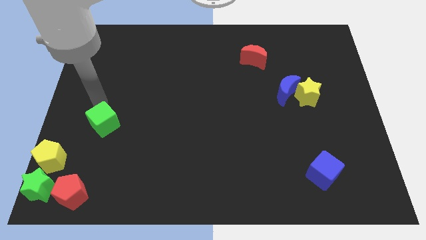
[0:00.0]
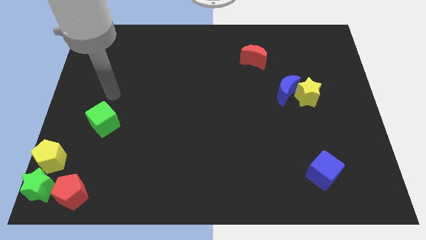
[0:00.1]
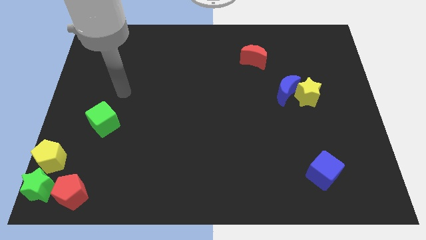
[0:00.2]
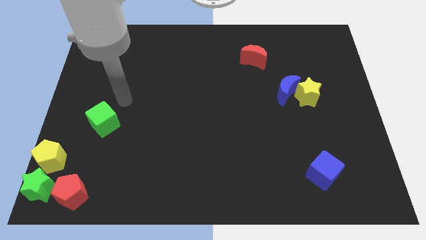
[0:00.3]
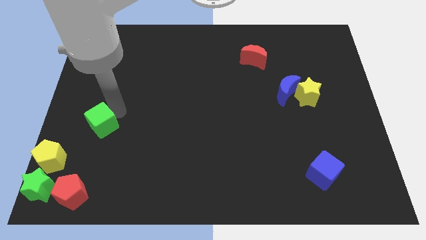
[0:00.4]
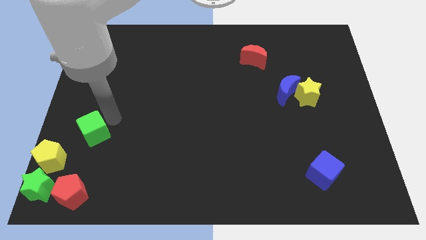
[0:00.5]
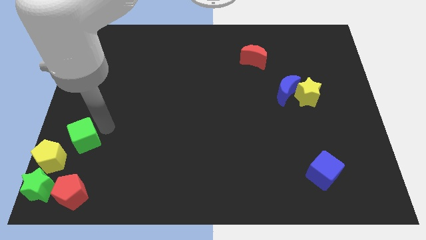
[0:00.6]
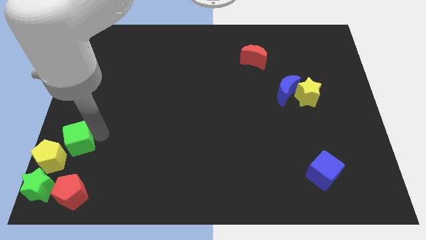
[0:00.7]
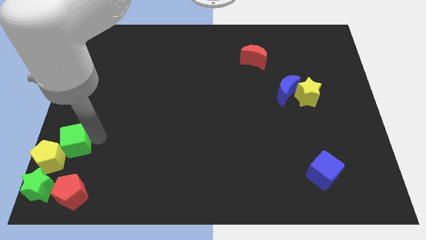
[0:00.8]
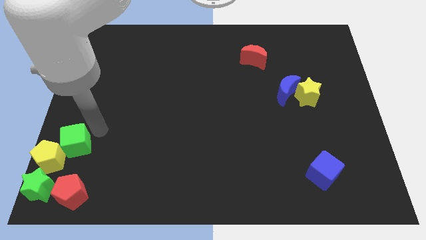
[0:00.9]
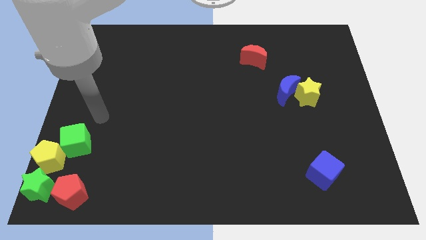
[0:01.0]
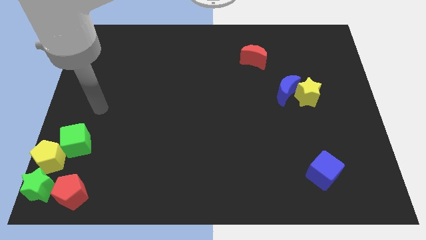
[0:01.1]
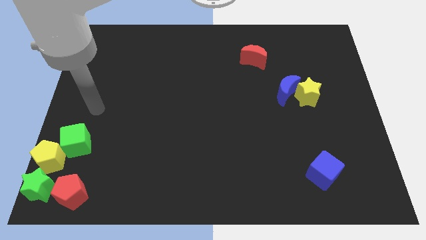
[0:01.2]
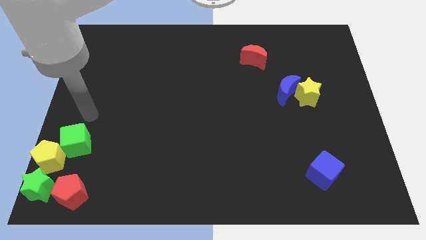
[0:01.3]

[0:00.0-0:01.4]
push the green cube into yellow pentagon

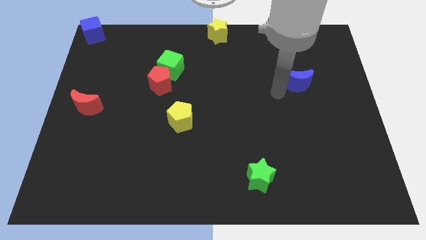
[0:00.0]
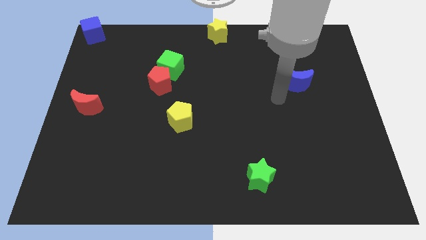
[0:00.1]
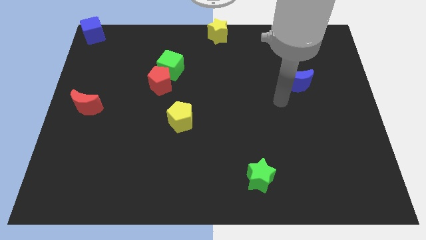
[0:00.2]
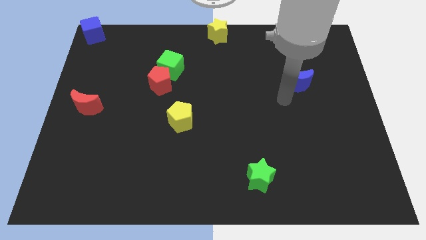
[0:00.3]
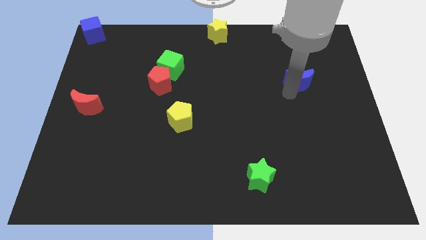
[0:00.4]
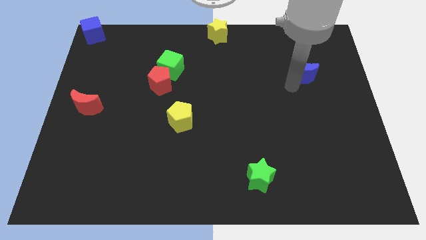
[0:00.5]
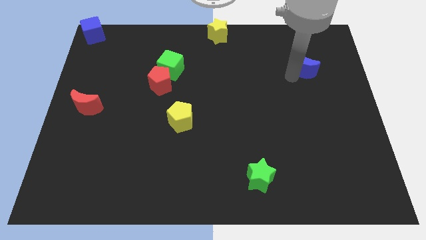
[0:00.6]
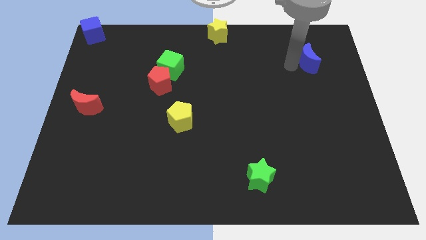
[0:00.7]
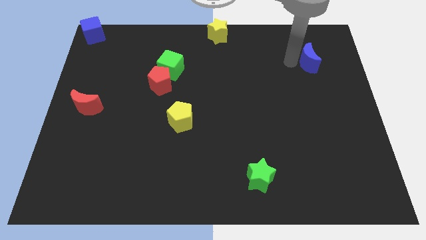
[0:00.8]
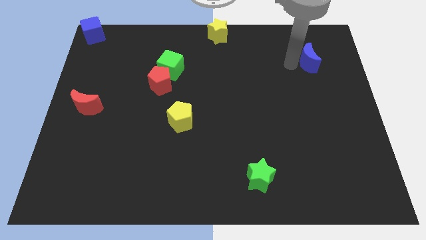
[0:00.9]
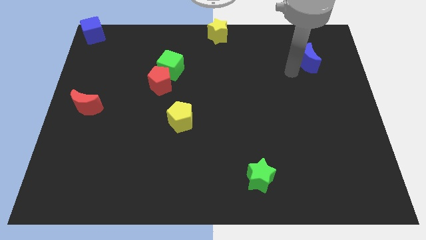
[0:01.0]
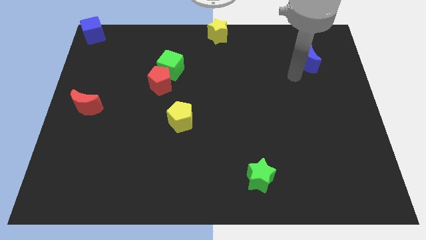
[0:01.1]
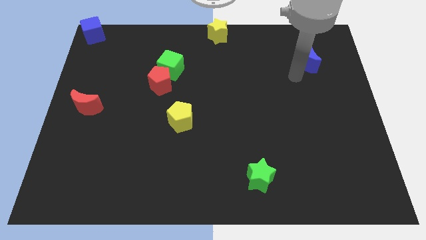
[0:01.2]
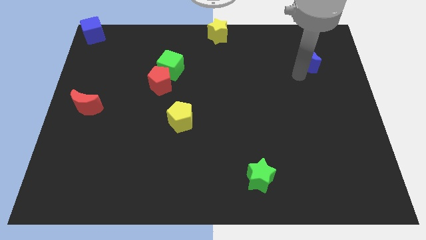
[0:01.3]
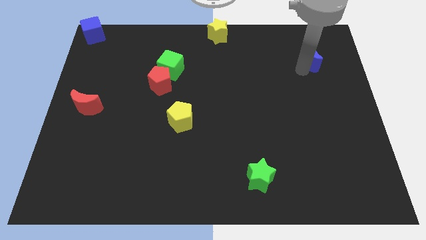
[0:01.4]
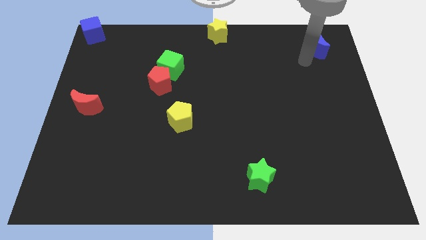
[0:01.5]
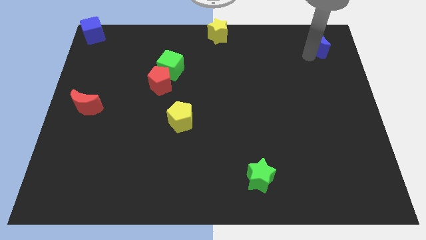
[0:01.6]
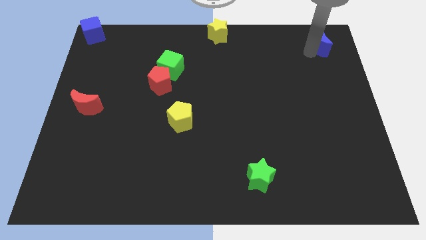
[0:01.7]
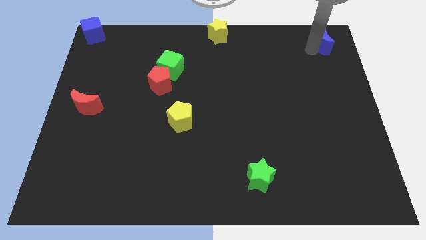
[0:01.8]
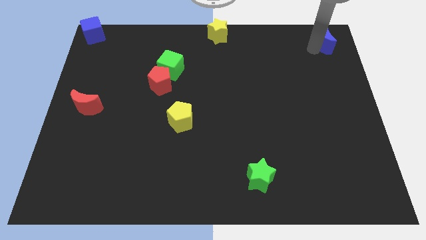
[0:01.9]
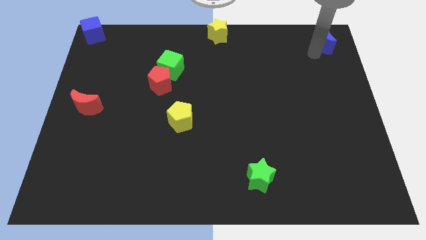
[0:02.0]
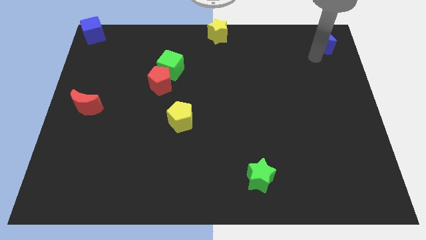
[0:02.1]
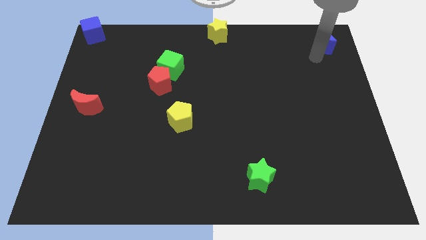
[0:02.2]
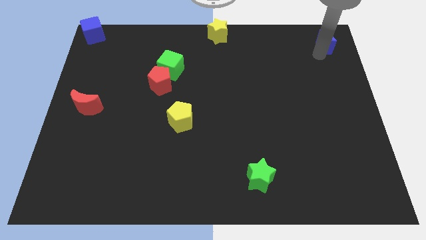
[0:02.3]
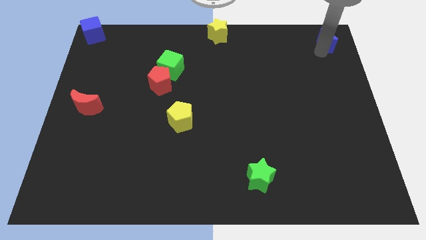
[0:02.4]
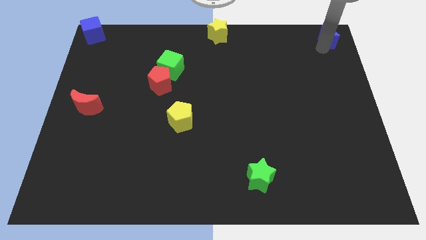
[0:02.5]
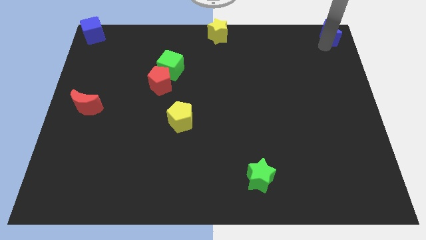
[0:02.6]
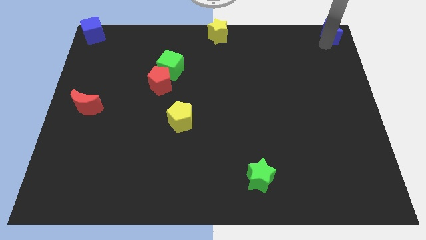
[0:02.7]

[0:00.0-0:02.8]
place the blue crescent at the top right of the board

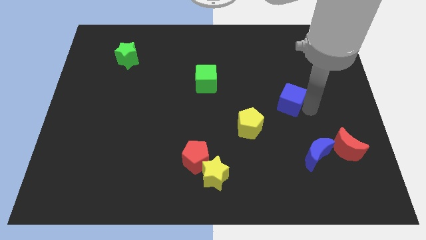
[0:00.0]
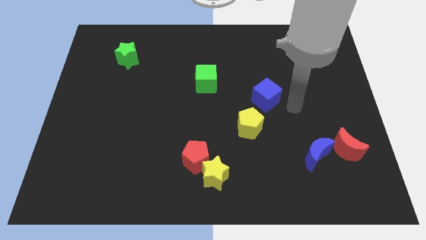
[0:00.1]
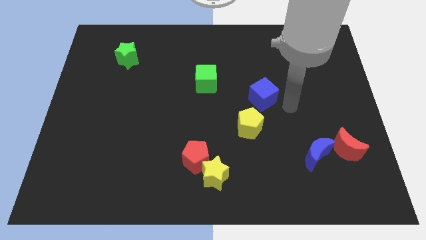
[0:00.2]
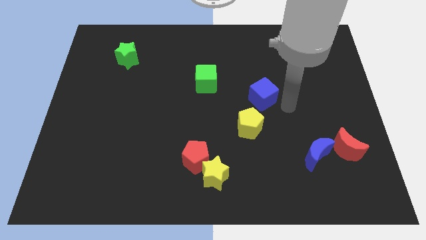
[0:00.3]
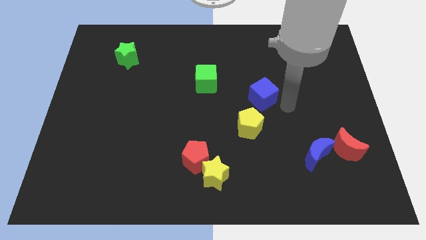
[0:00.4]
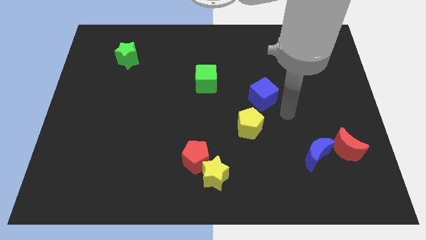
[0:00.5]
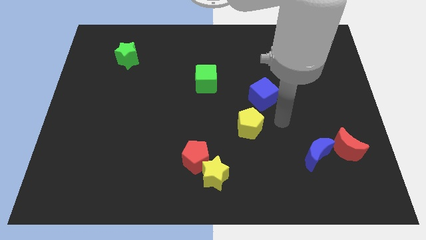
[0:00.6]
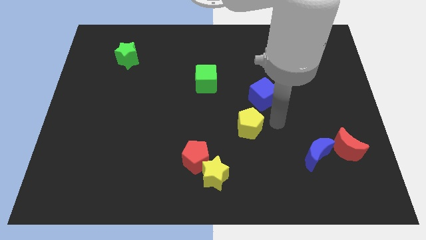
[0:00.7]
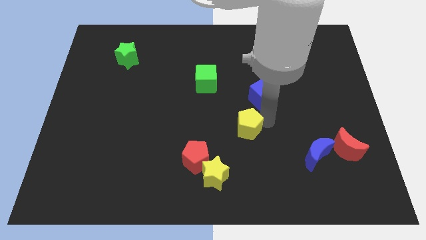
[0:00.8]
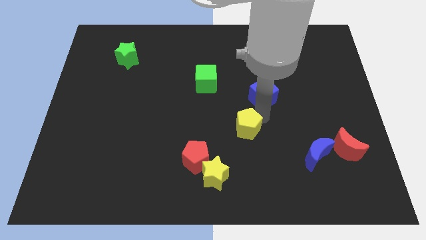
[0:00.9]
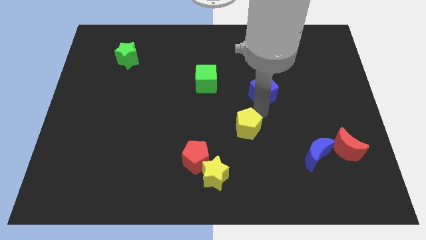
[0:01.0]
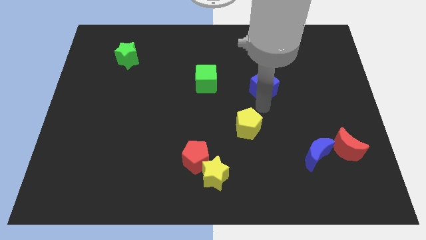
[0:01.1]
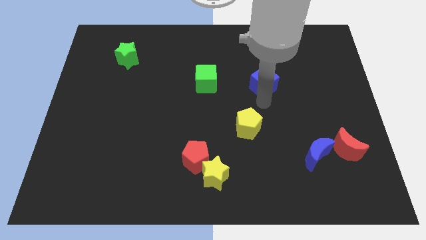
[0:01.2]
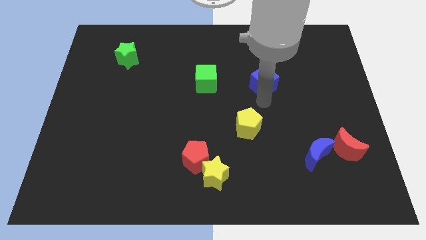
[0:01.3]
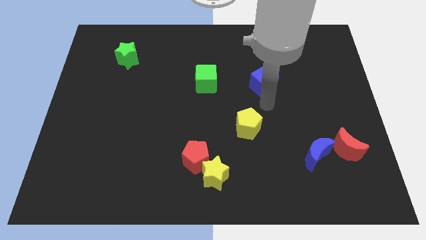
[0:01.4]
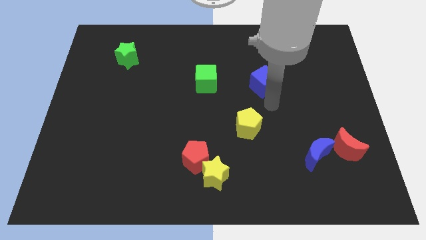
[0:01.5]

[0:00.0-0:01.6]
place the blue cube horizontally to the right side of the green cube

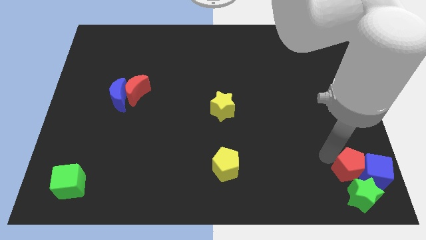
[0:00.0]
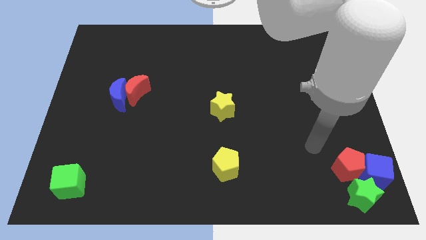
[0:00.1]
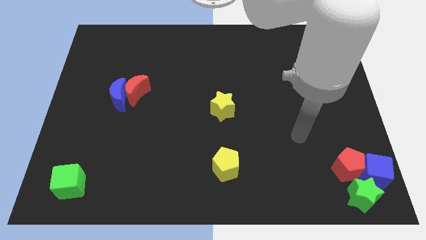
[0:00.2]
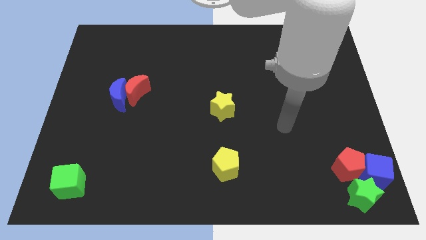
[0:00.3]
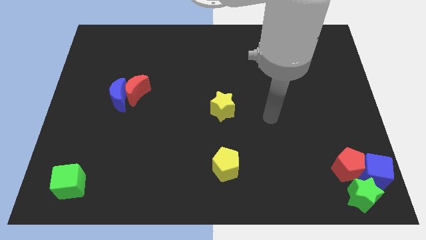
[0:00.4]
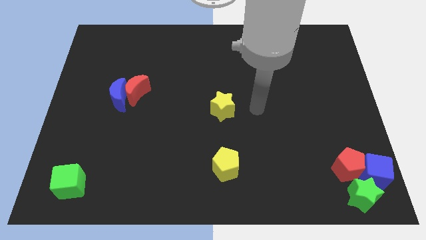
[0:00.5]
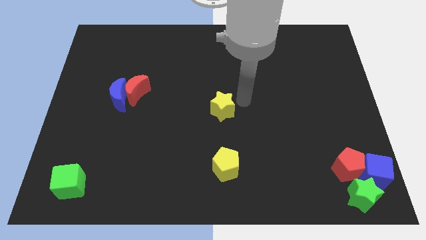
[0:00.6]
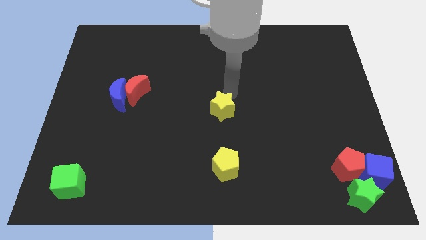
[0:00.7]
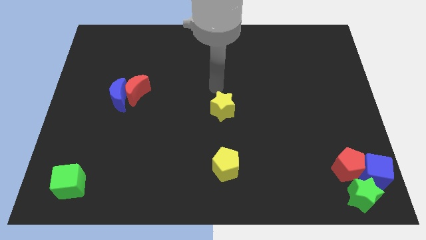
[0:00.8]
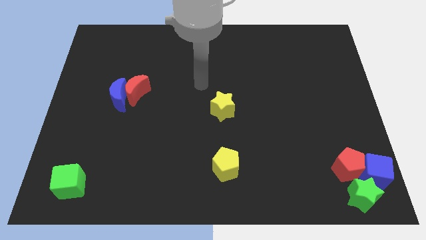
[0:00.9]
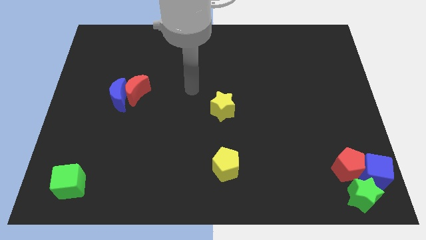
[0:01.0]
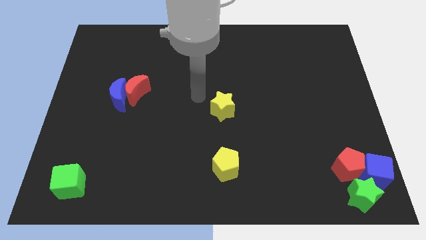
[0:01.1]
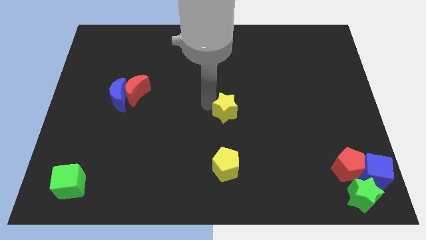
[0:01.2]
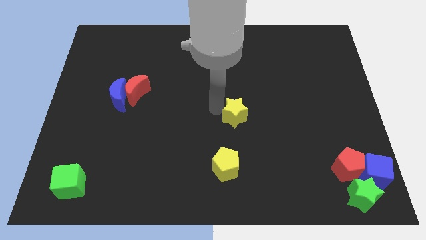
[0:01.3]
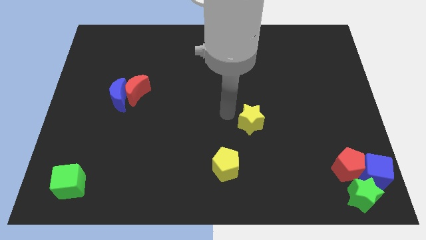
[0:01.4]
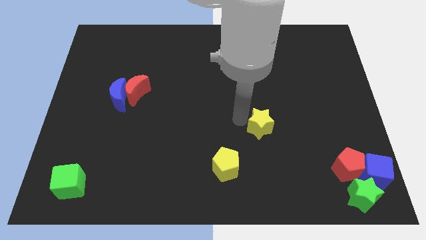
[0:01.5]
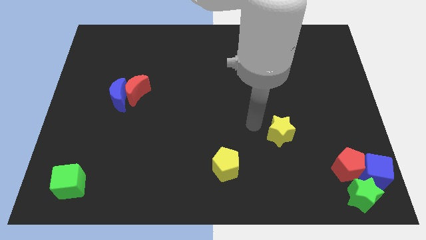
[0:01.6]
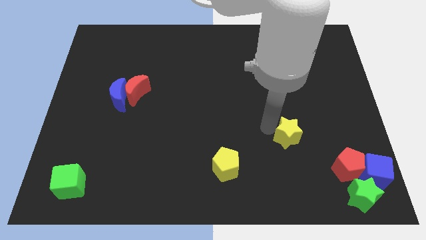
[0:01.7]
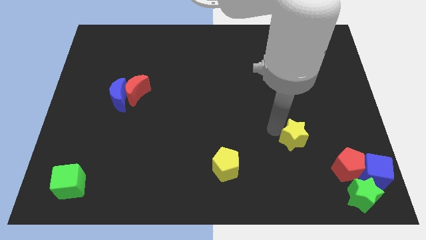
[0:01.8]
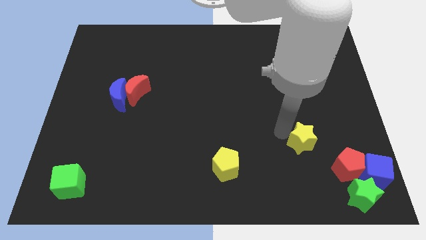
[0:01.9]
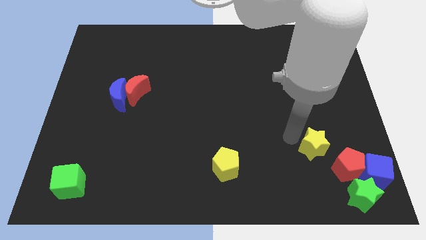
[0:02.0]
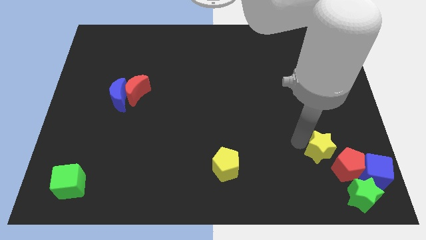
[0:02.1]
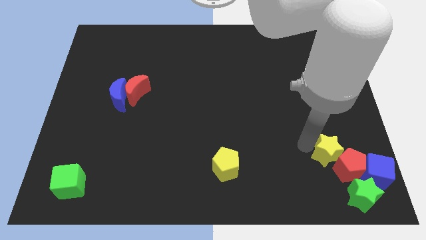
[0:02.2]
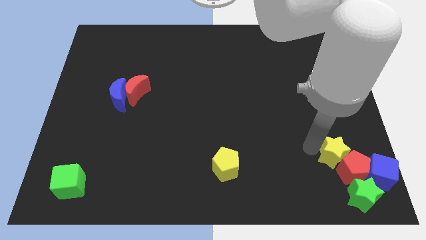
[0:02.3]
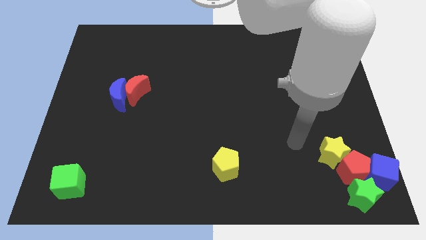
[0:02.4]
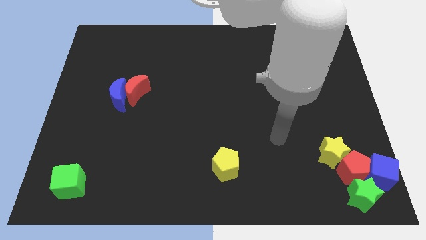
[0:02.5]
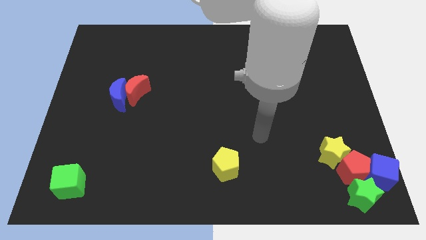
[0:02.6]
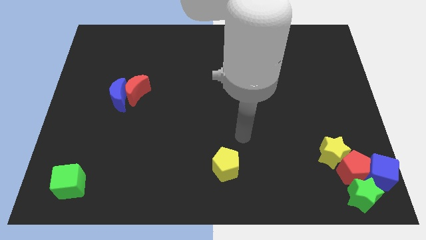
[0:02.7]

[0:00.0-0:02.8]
move the yellow star into the red pentagon

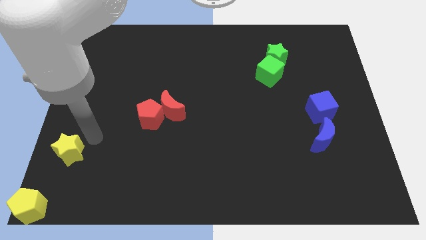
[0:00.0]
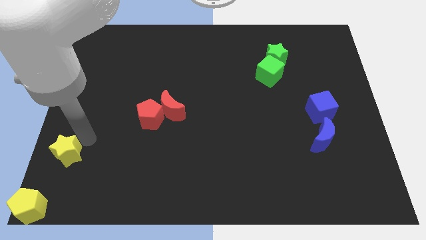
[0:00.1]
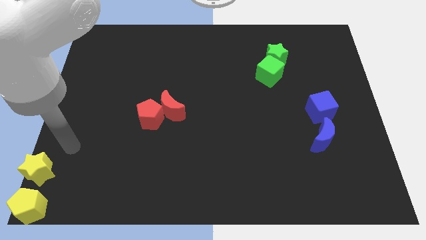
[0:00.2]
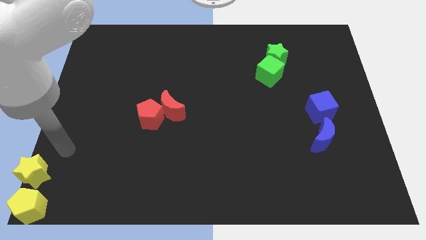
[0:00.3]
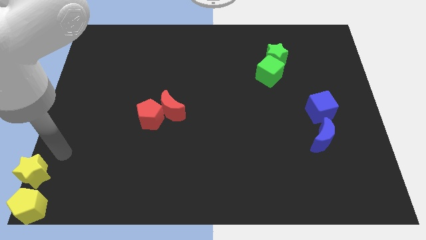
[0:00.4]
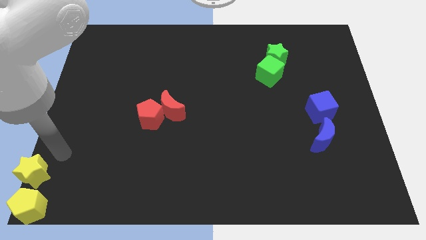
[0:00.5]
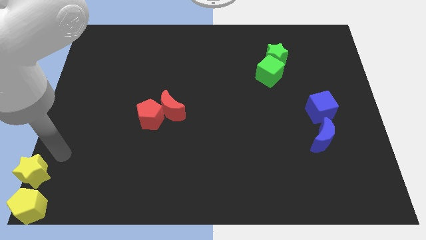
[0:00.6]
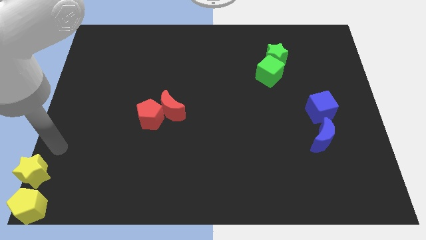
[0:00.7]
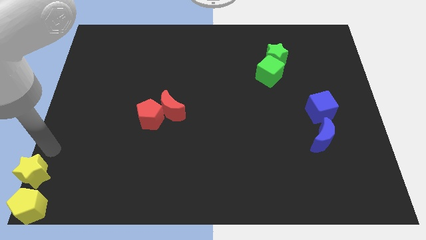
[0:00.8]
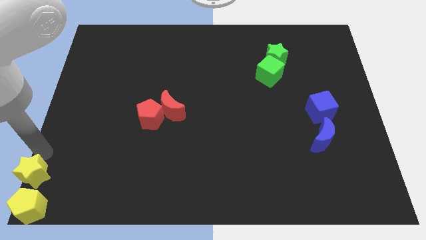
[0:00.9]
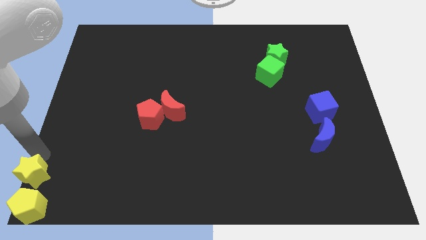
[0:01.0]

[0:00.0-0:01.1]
push the yellow star to the top side of the yellow pentagon
